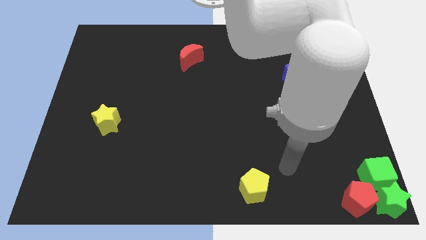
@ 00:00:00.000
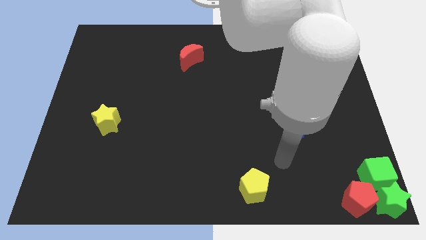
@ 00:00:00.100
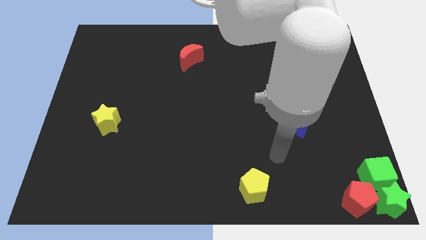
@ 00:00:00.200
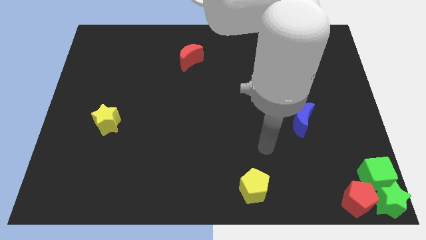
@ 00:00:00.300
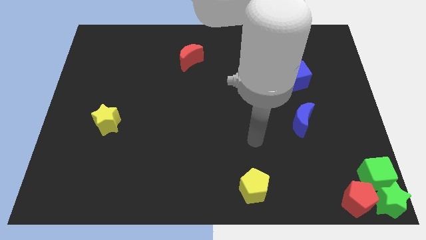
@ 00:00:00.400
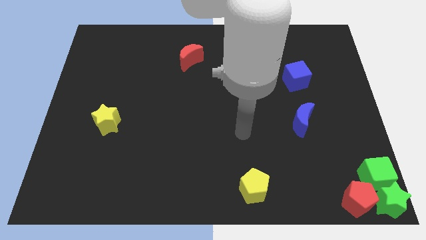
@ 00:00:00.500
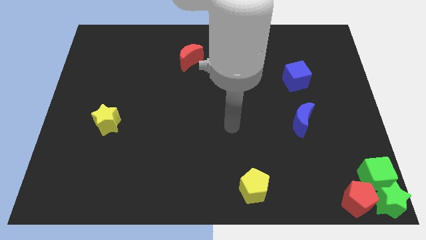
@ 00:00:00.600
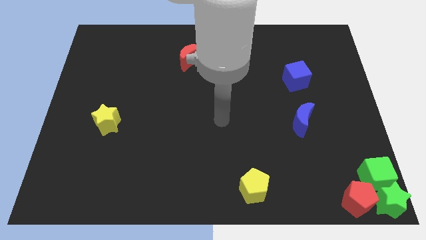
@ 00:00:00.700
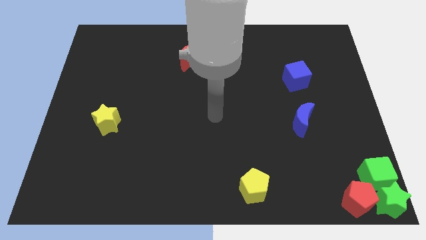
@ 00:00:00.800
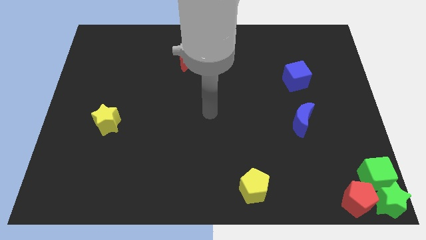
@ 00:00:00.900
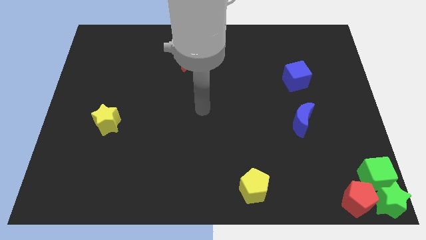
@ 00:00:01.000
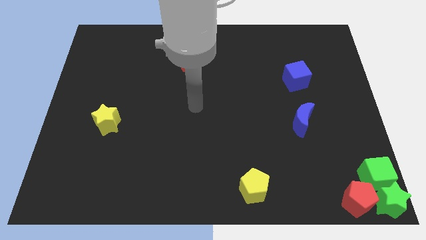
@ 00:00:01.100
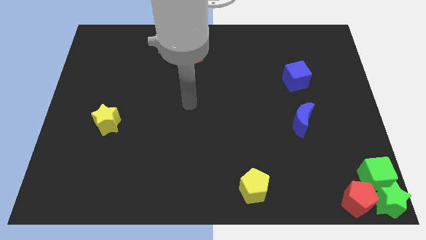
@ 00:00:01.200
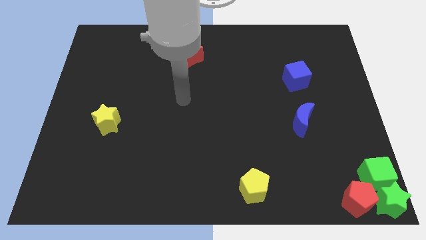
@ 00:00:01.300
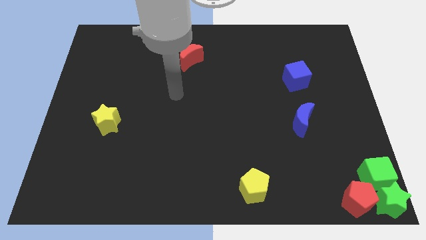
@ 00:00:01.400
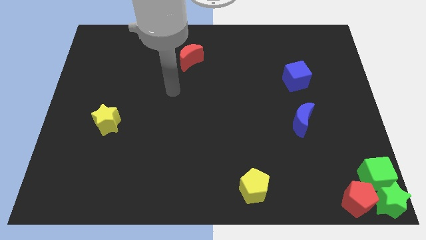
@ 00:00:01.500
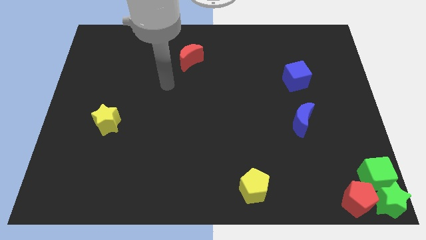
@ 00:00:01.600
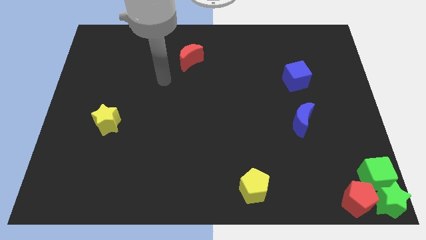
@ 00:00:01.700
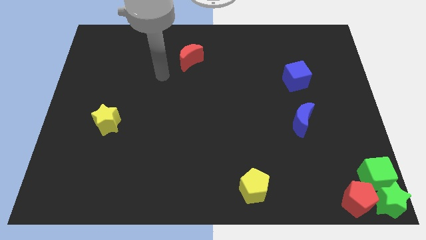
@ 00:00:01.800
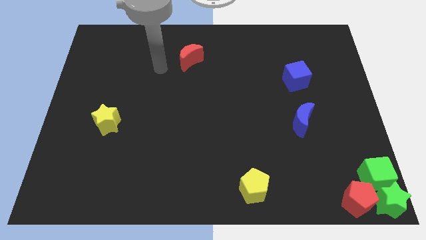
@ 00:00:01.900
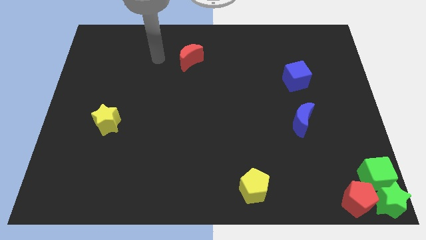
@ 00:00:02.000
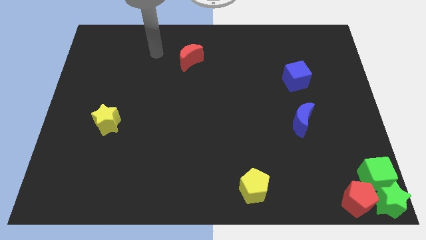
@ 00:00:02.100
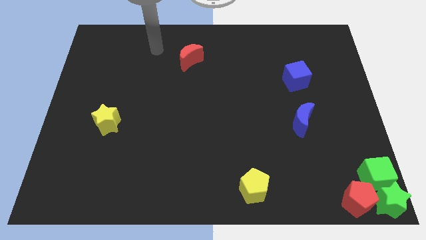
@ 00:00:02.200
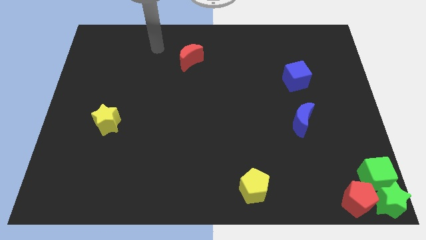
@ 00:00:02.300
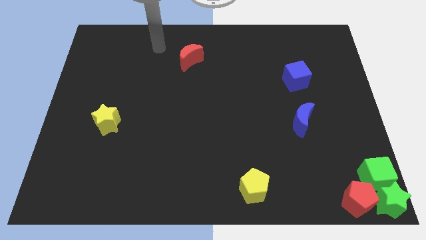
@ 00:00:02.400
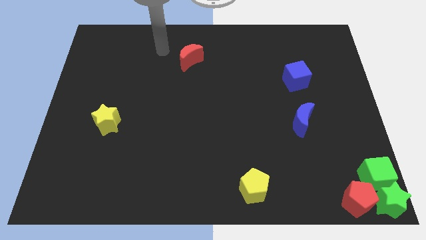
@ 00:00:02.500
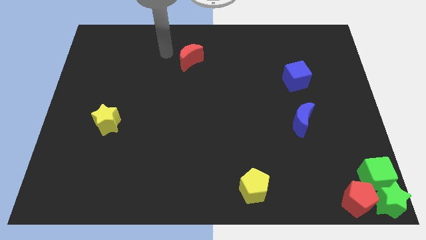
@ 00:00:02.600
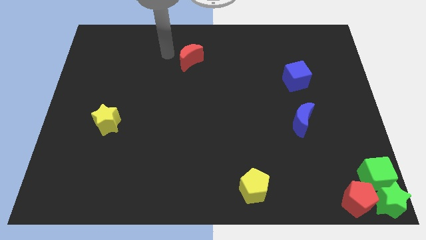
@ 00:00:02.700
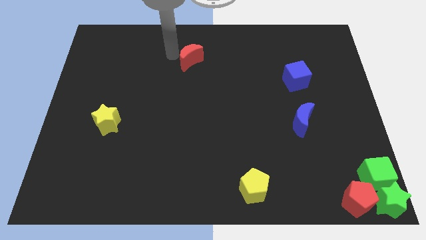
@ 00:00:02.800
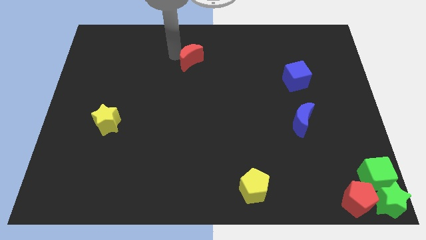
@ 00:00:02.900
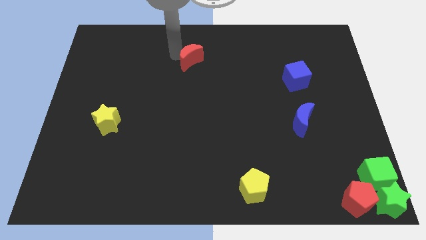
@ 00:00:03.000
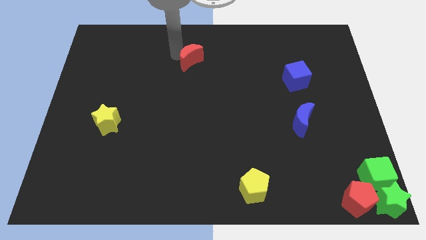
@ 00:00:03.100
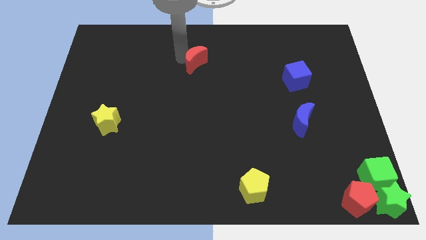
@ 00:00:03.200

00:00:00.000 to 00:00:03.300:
touch the top of the red crescent

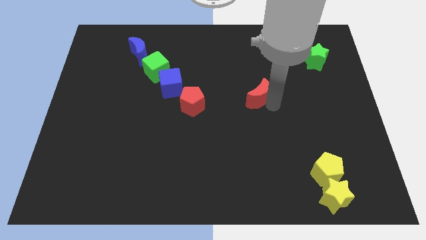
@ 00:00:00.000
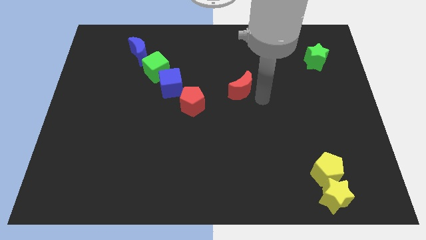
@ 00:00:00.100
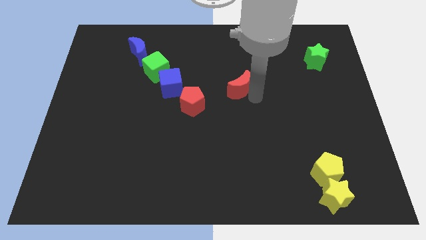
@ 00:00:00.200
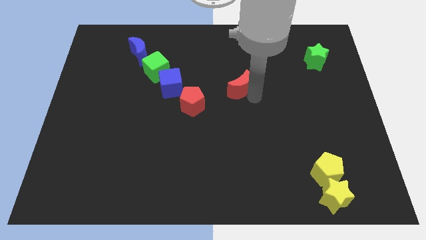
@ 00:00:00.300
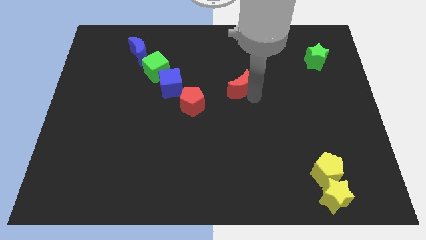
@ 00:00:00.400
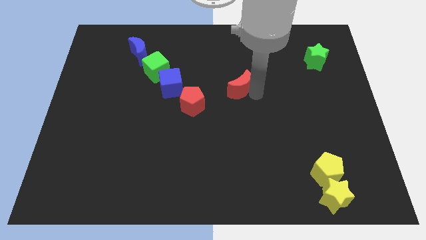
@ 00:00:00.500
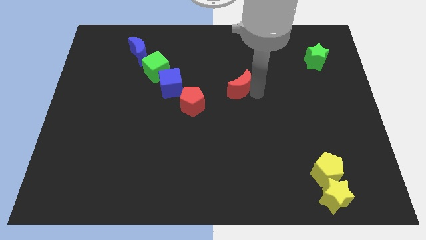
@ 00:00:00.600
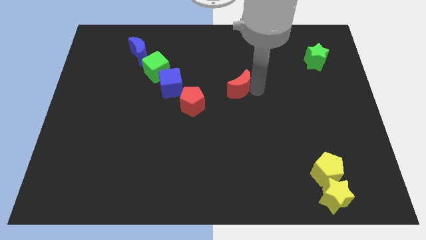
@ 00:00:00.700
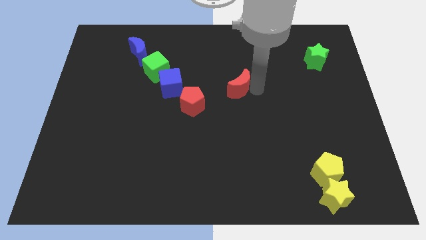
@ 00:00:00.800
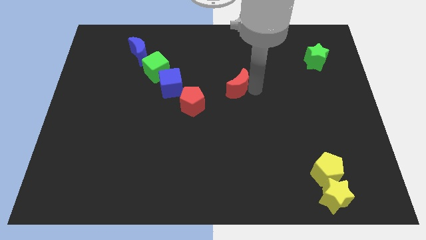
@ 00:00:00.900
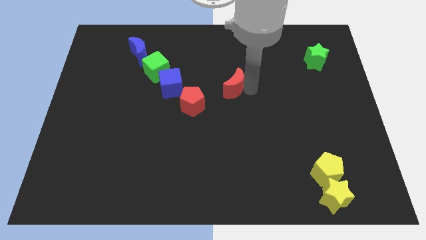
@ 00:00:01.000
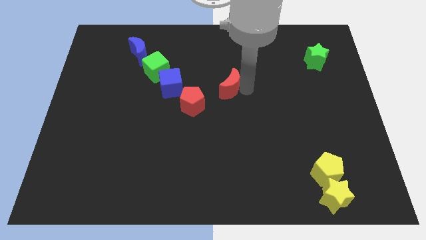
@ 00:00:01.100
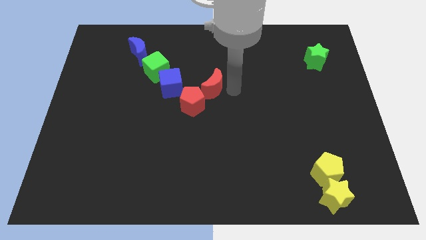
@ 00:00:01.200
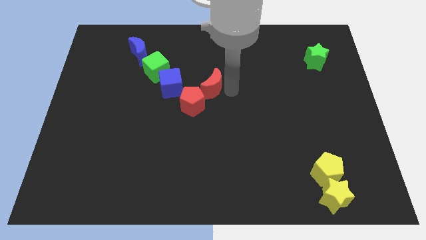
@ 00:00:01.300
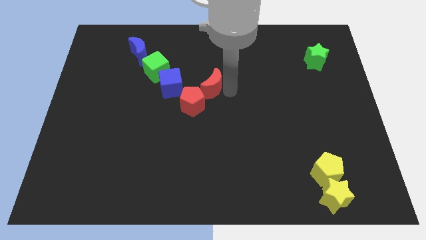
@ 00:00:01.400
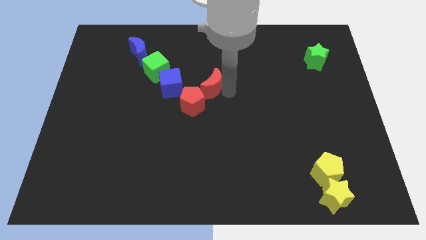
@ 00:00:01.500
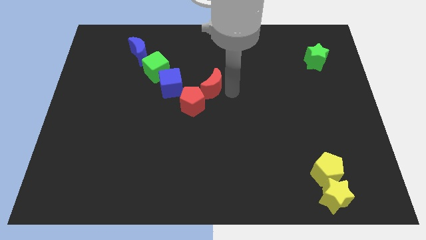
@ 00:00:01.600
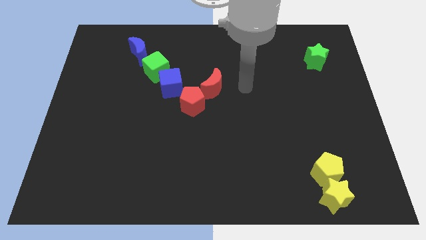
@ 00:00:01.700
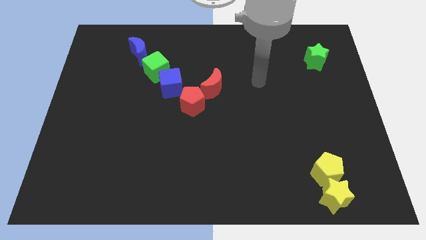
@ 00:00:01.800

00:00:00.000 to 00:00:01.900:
put the red crescent to the top right side of the red pentagon

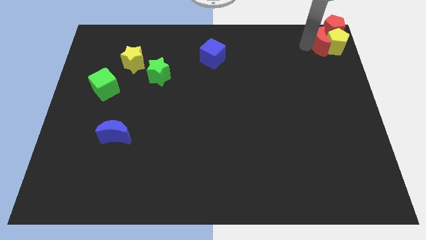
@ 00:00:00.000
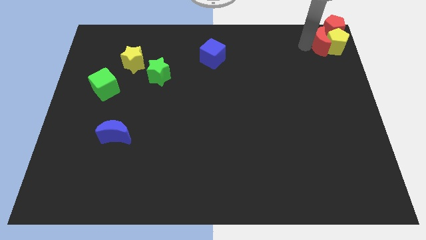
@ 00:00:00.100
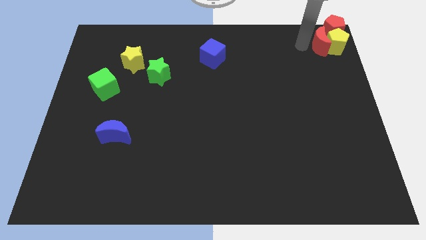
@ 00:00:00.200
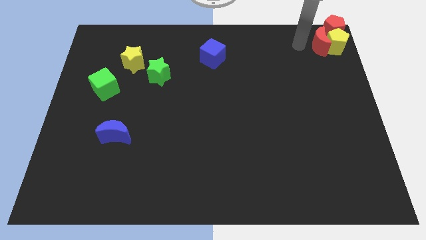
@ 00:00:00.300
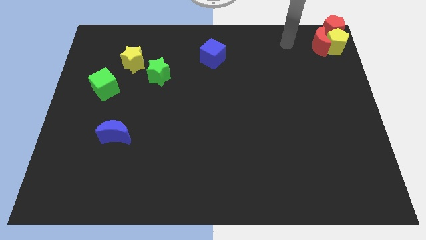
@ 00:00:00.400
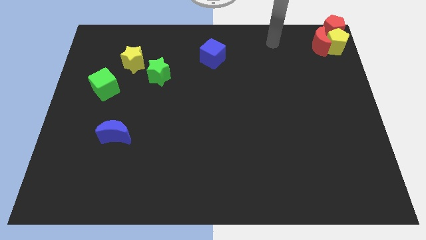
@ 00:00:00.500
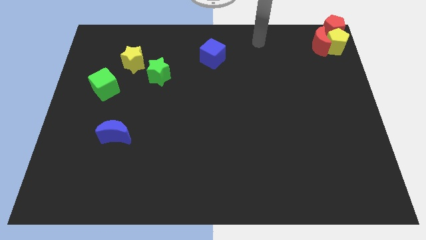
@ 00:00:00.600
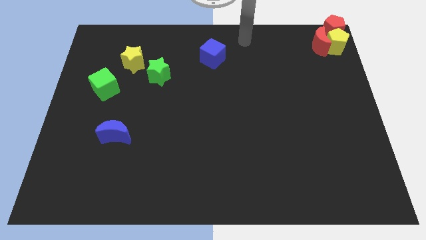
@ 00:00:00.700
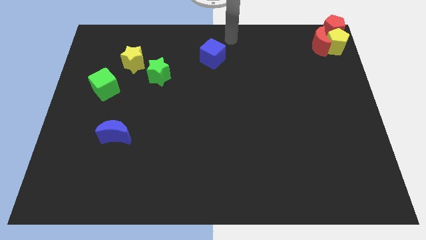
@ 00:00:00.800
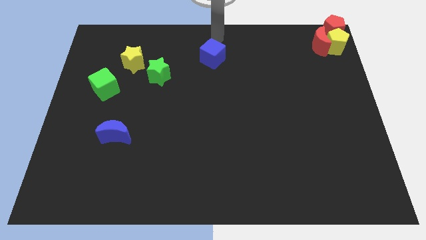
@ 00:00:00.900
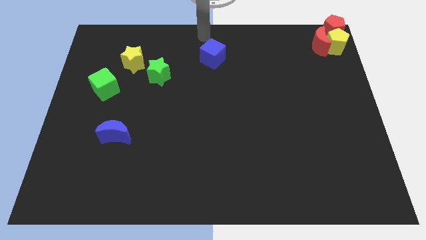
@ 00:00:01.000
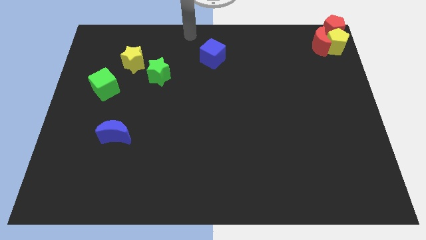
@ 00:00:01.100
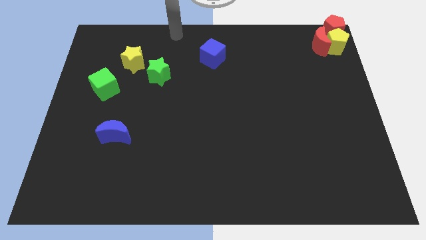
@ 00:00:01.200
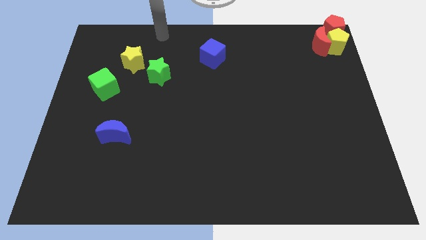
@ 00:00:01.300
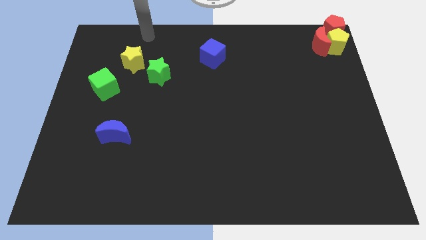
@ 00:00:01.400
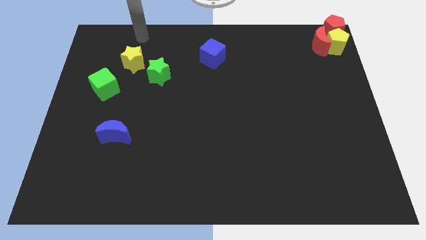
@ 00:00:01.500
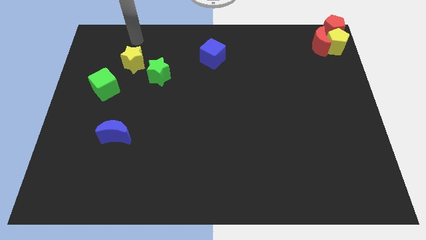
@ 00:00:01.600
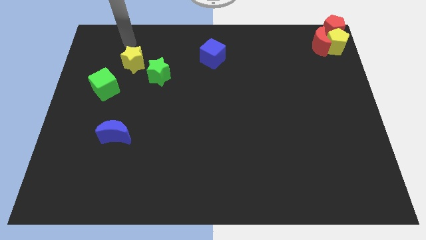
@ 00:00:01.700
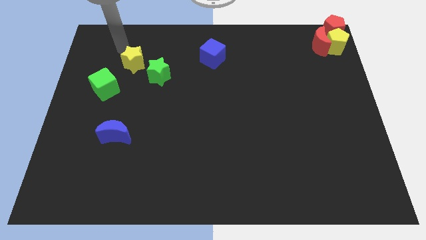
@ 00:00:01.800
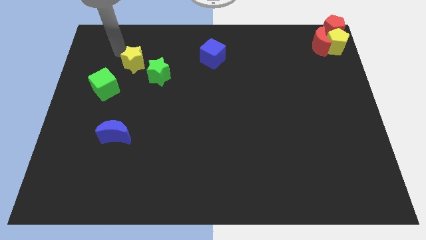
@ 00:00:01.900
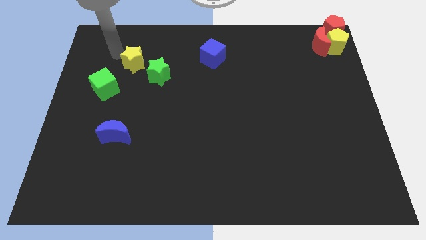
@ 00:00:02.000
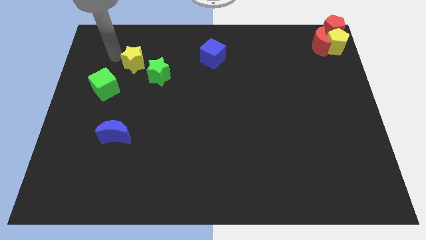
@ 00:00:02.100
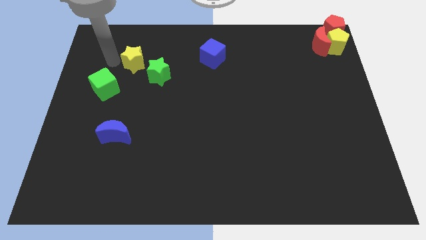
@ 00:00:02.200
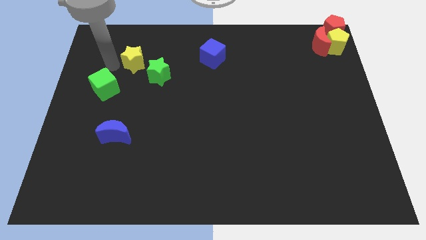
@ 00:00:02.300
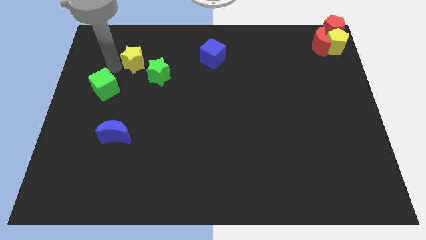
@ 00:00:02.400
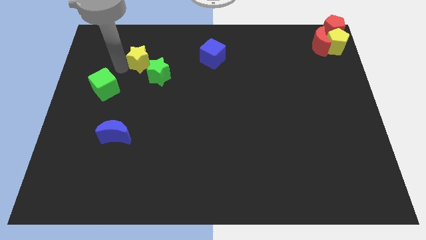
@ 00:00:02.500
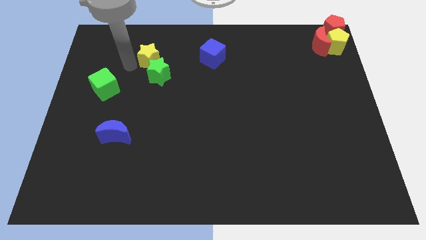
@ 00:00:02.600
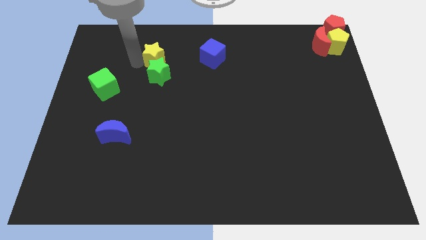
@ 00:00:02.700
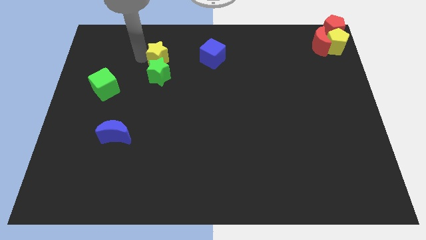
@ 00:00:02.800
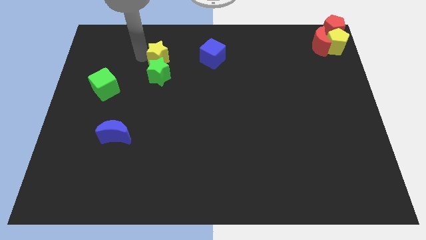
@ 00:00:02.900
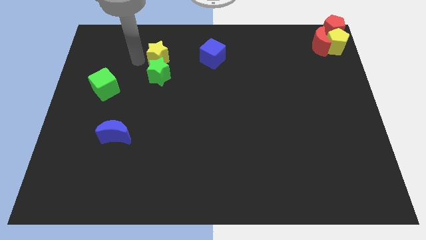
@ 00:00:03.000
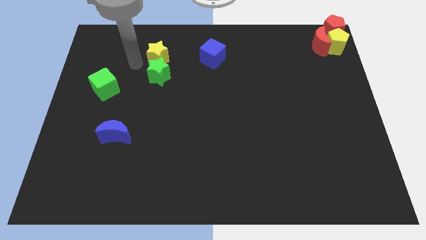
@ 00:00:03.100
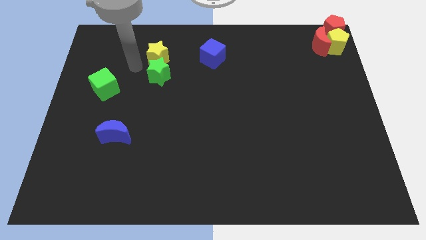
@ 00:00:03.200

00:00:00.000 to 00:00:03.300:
place the yellow star at the top side of the green star

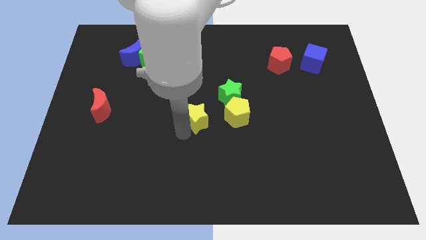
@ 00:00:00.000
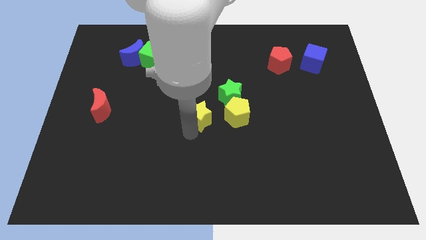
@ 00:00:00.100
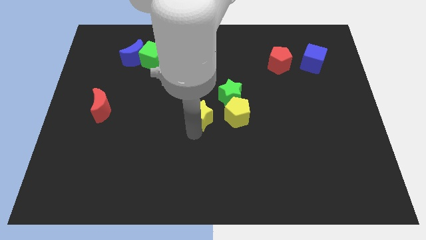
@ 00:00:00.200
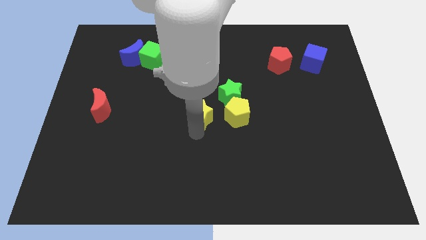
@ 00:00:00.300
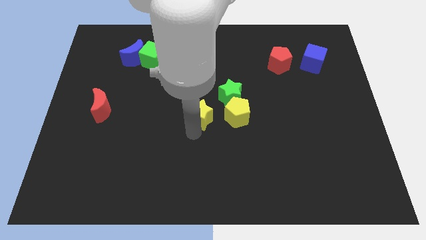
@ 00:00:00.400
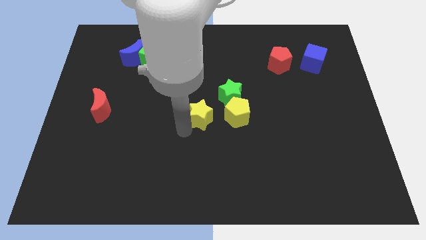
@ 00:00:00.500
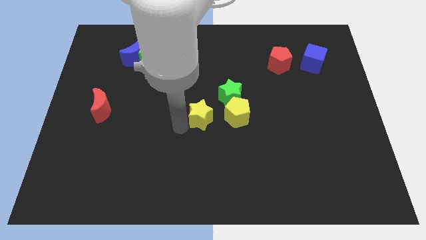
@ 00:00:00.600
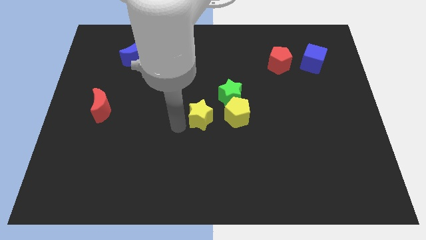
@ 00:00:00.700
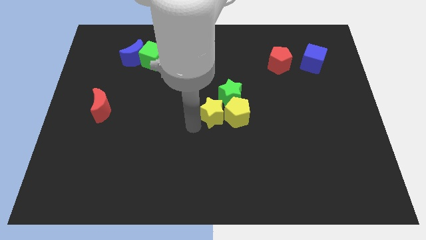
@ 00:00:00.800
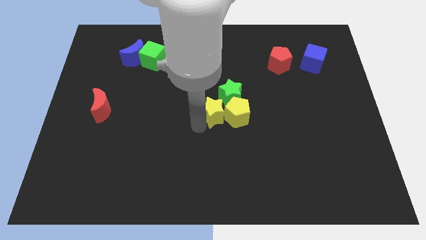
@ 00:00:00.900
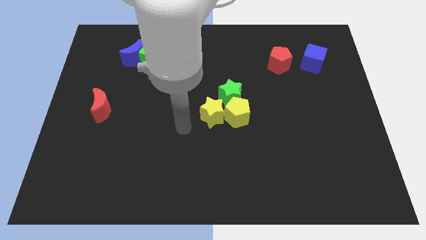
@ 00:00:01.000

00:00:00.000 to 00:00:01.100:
slide the yellow star close to the left side of the yellow pentagon
